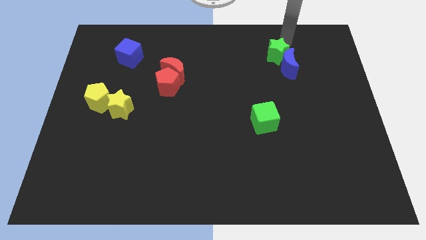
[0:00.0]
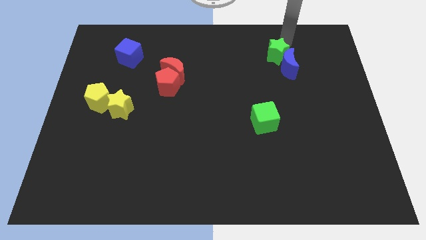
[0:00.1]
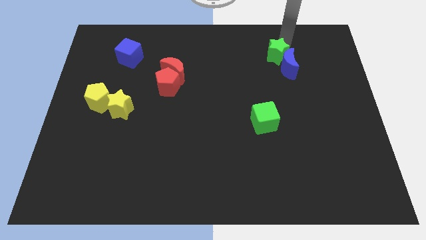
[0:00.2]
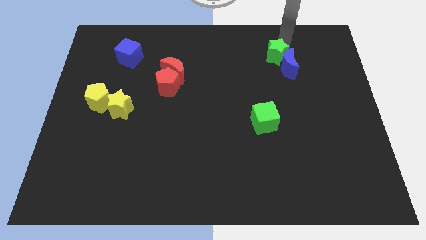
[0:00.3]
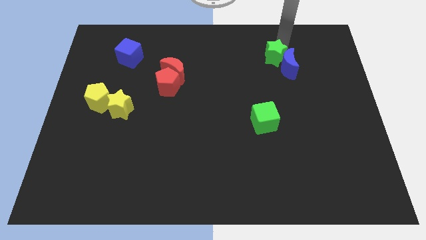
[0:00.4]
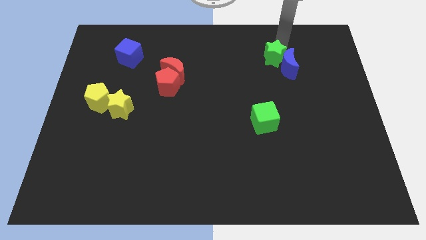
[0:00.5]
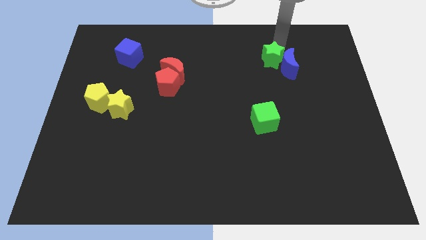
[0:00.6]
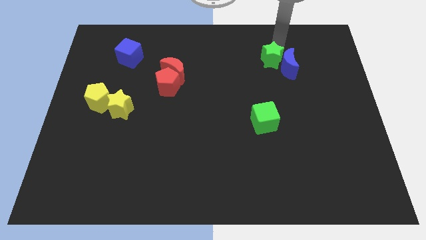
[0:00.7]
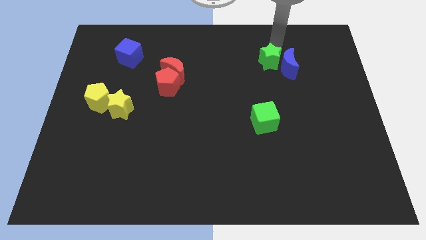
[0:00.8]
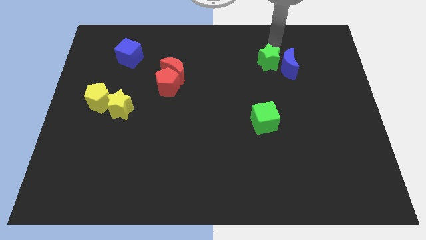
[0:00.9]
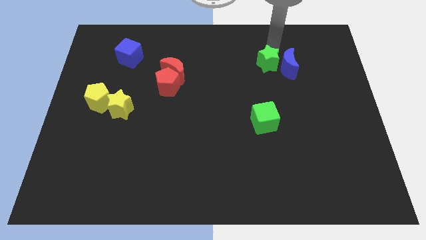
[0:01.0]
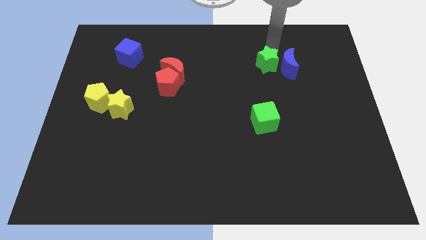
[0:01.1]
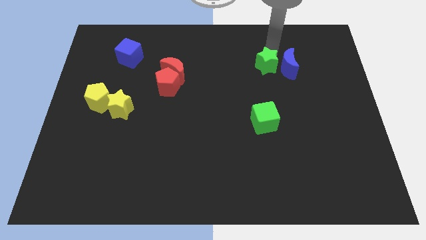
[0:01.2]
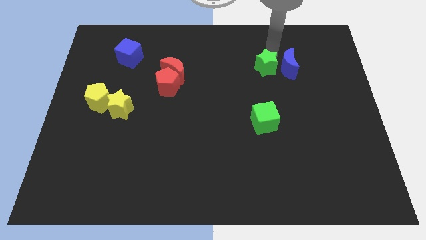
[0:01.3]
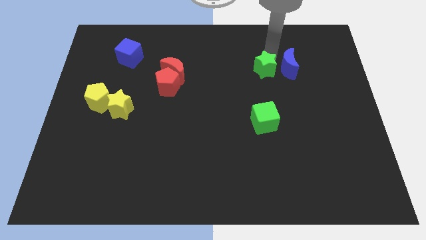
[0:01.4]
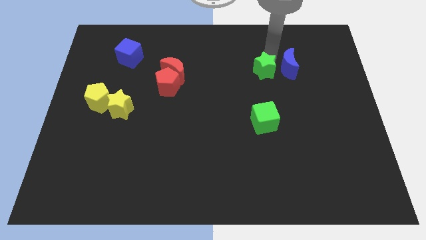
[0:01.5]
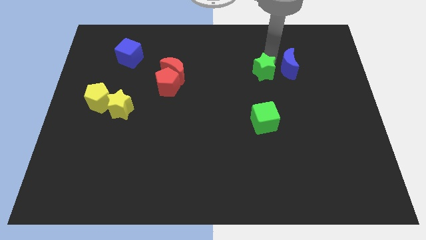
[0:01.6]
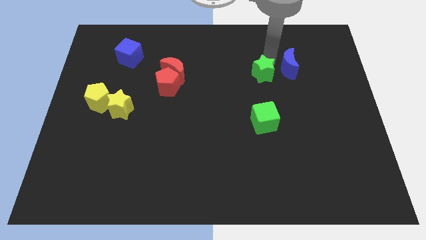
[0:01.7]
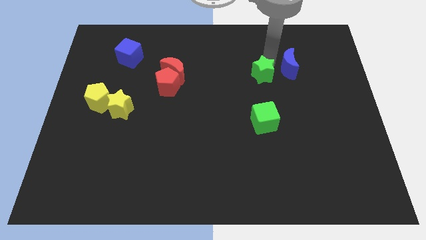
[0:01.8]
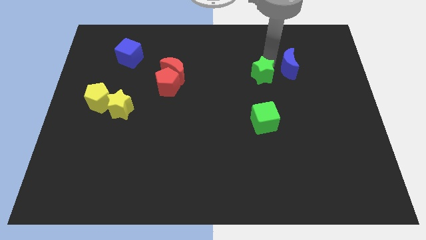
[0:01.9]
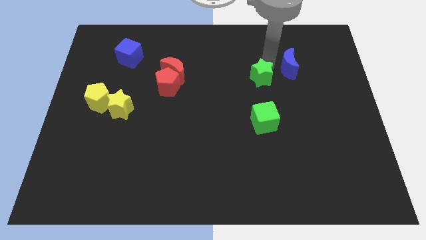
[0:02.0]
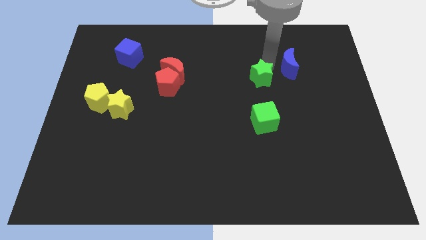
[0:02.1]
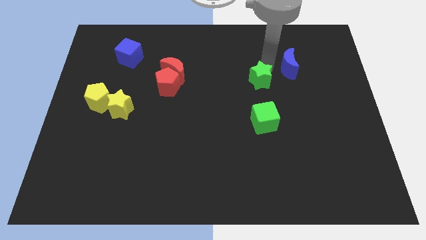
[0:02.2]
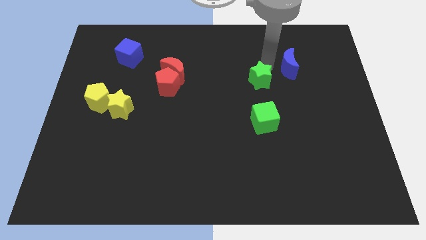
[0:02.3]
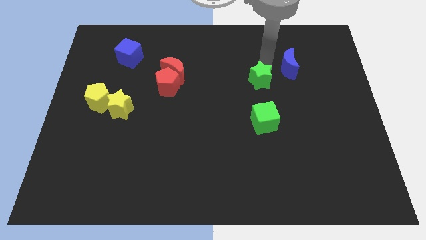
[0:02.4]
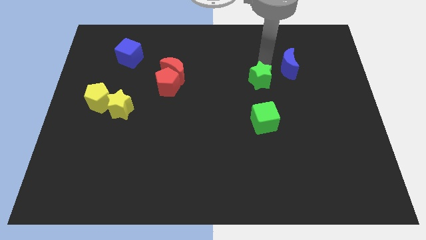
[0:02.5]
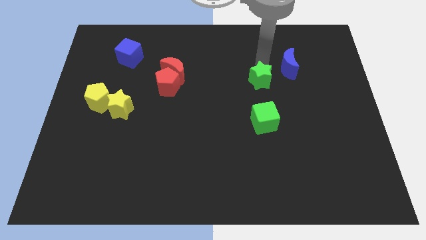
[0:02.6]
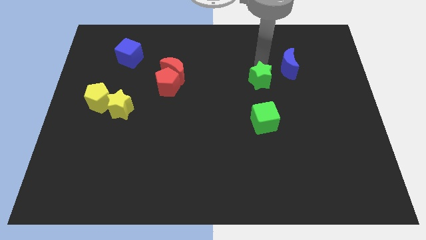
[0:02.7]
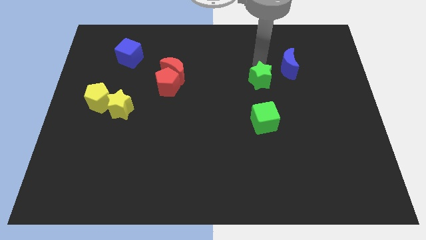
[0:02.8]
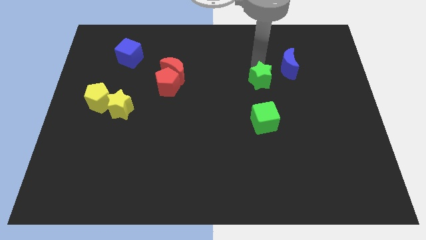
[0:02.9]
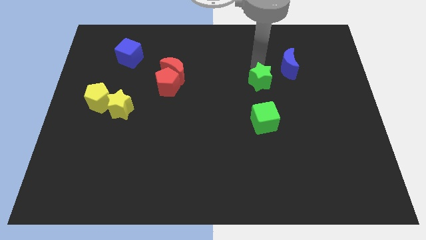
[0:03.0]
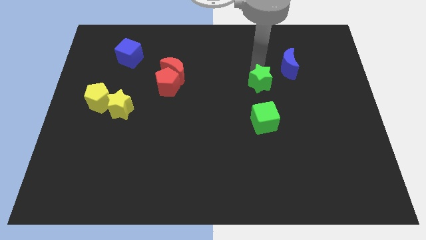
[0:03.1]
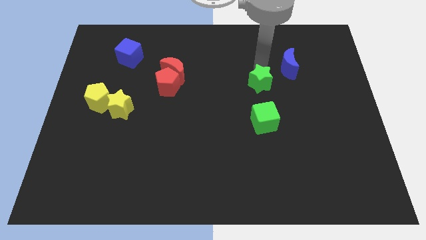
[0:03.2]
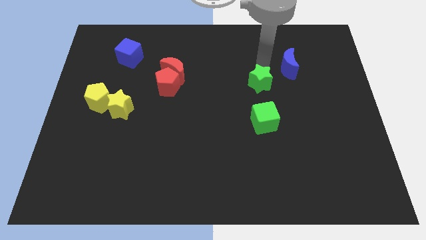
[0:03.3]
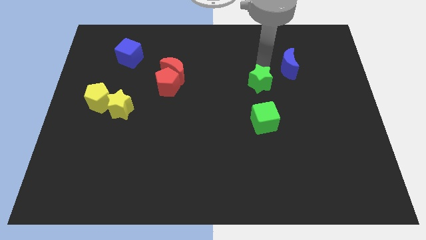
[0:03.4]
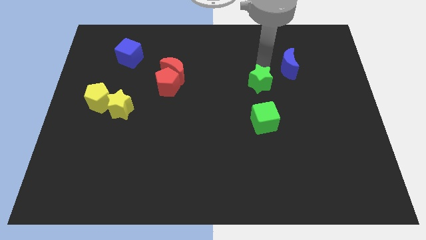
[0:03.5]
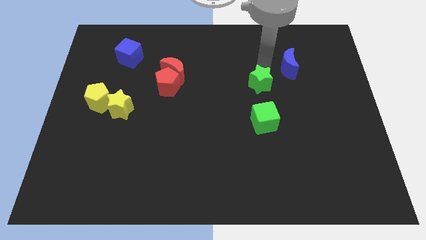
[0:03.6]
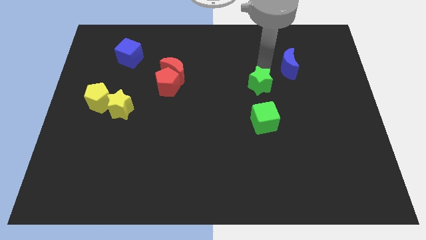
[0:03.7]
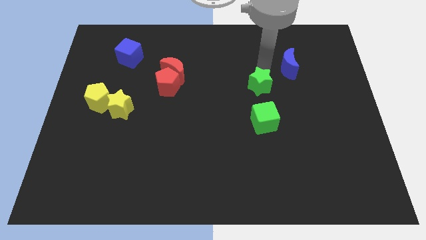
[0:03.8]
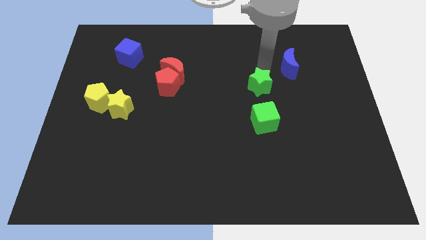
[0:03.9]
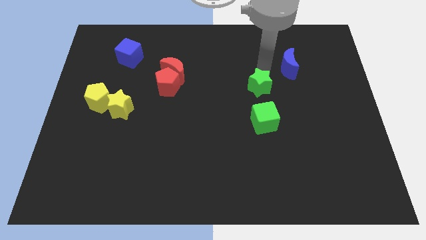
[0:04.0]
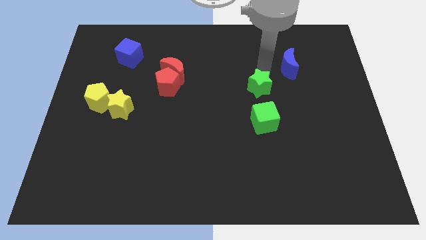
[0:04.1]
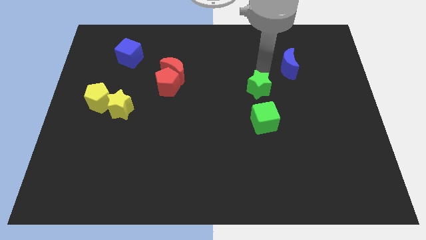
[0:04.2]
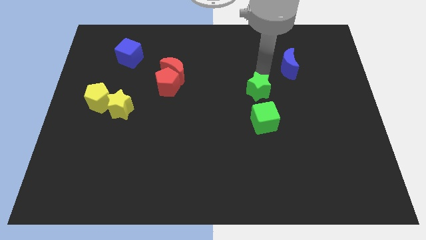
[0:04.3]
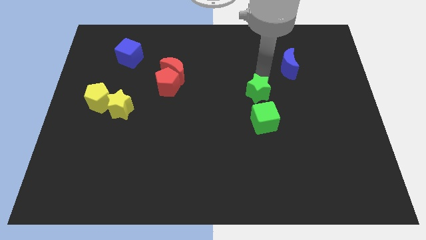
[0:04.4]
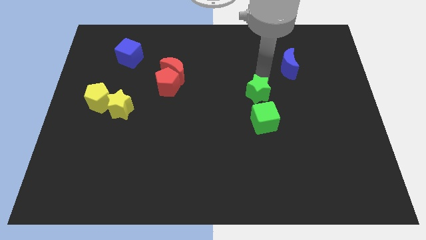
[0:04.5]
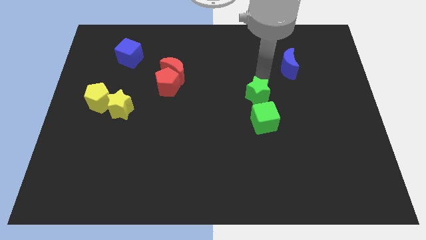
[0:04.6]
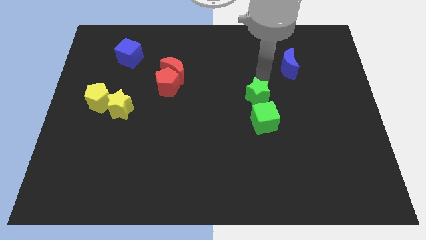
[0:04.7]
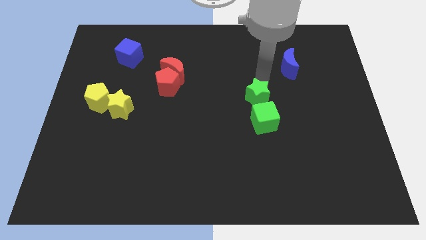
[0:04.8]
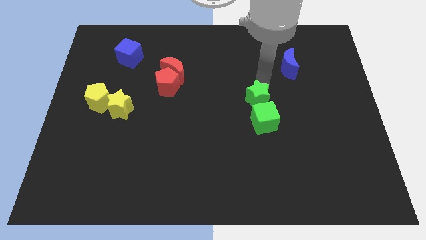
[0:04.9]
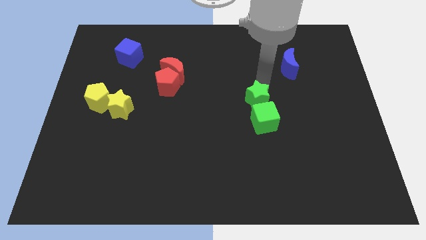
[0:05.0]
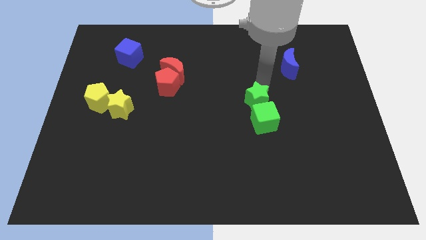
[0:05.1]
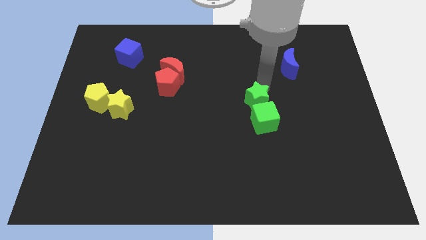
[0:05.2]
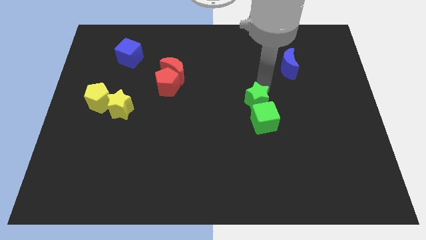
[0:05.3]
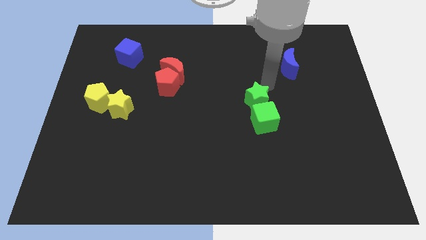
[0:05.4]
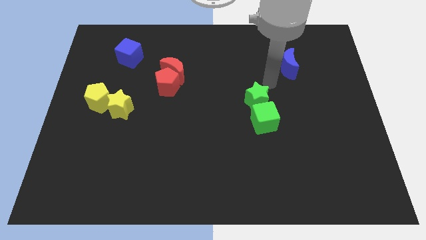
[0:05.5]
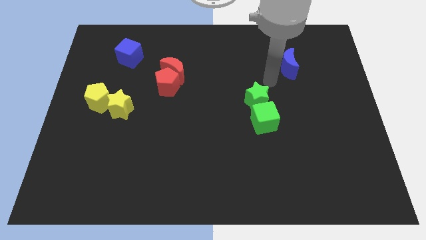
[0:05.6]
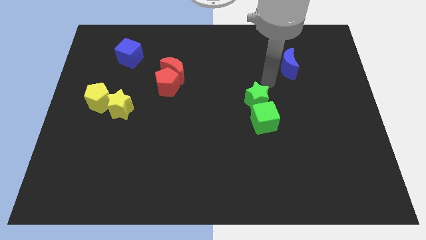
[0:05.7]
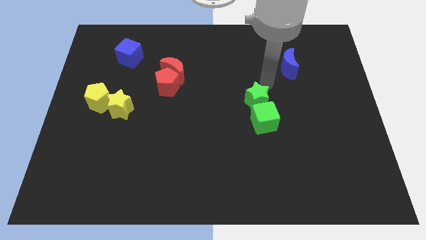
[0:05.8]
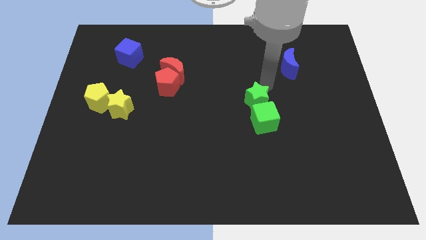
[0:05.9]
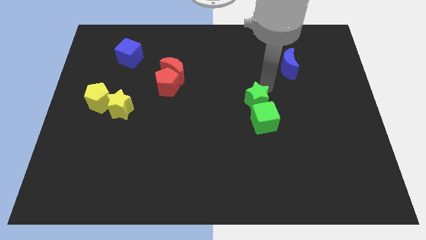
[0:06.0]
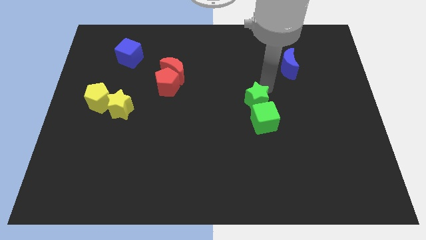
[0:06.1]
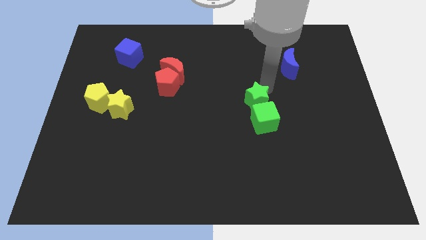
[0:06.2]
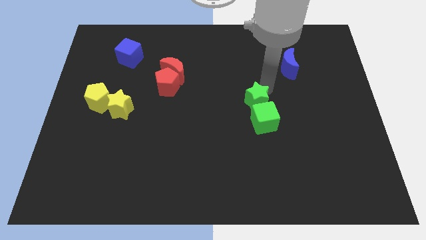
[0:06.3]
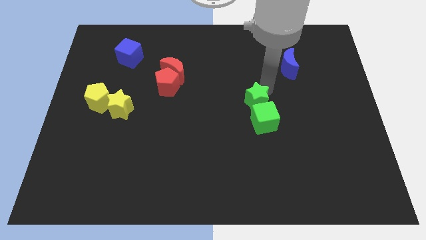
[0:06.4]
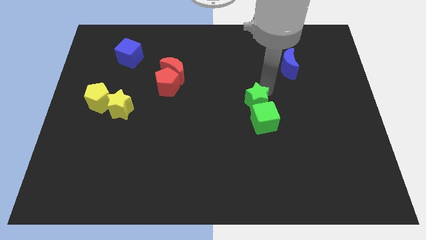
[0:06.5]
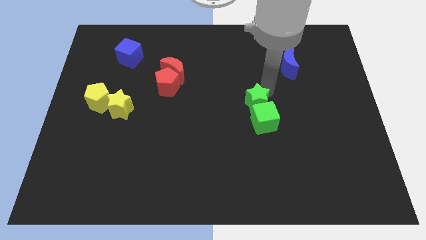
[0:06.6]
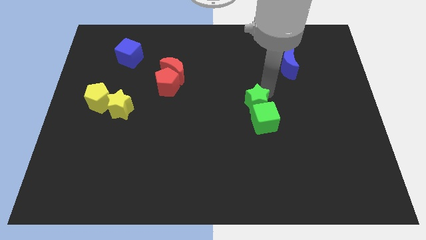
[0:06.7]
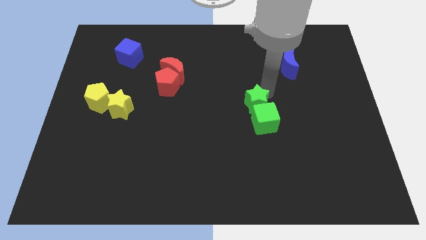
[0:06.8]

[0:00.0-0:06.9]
move the green star into the top side of the green cube

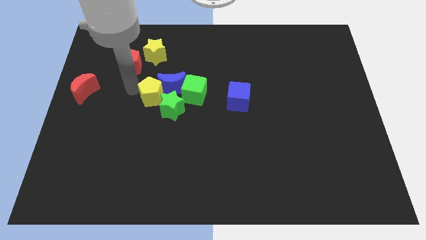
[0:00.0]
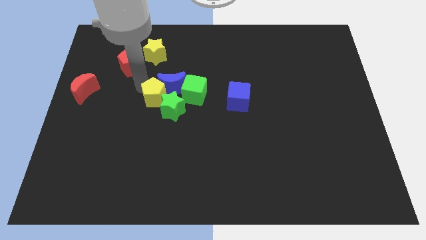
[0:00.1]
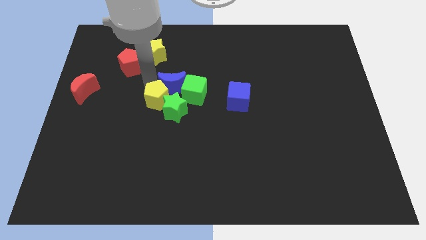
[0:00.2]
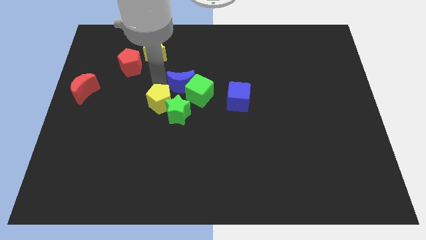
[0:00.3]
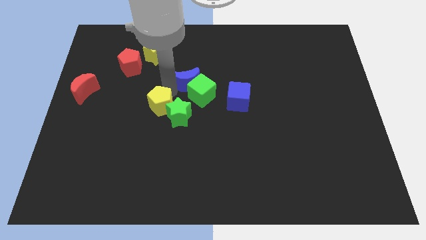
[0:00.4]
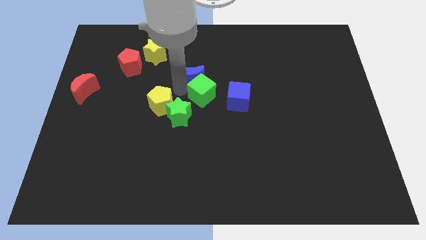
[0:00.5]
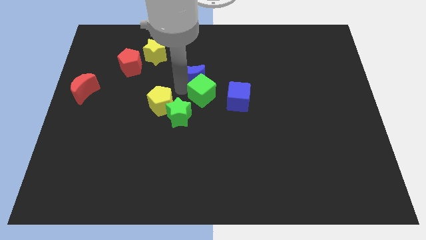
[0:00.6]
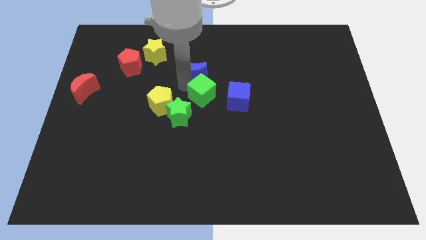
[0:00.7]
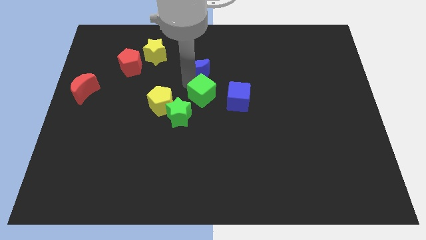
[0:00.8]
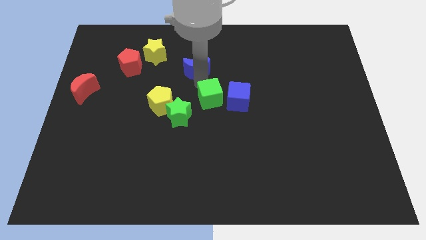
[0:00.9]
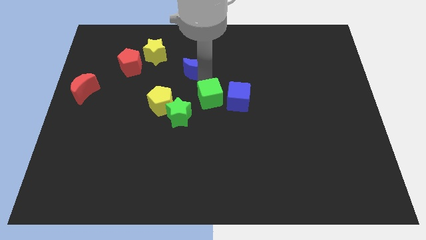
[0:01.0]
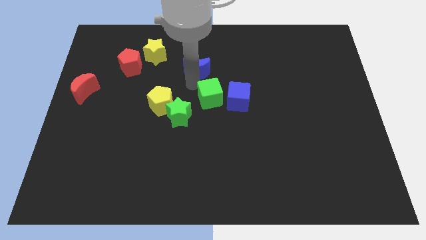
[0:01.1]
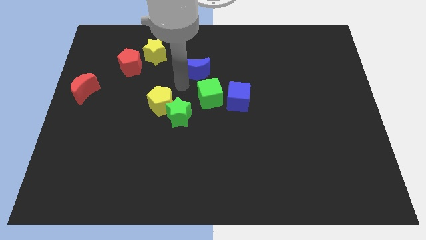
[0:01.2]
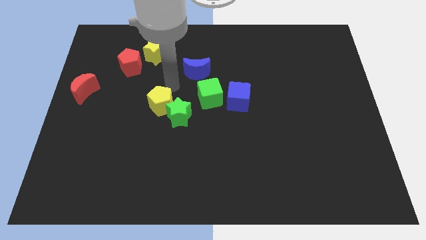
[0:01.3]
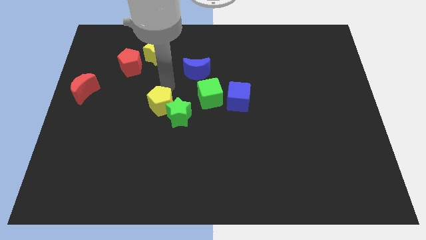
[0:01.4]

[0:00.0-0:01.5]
separate the blue crescent from the group of blocks

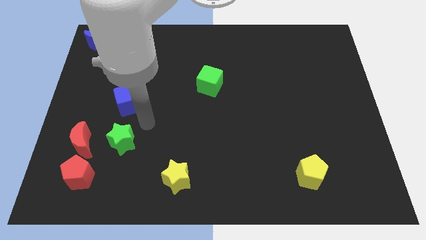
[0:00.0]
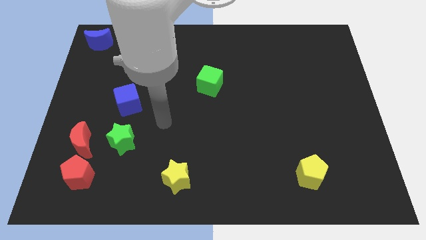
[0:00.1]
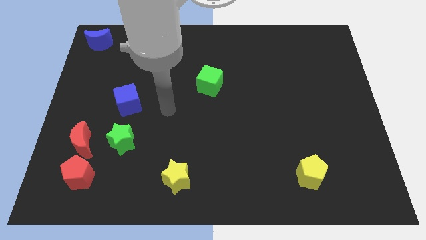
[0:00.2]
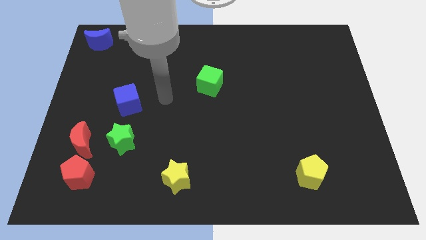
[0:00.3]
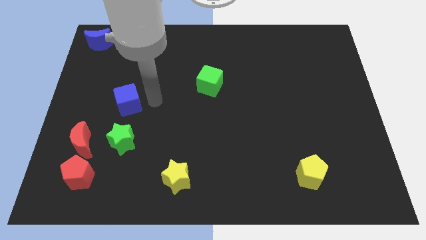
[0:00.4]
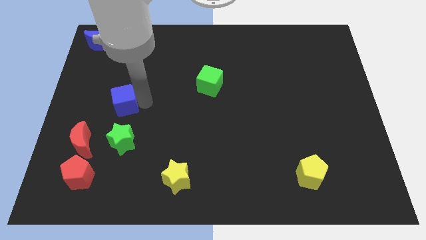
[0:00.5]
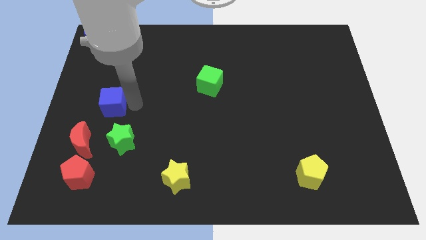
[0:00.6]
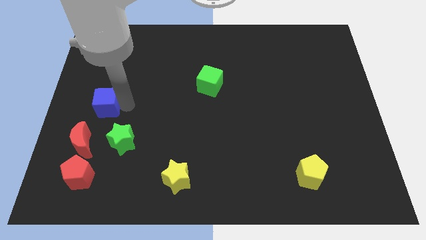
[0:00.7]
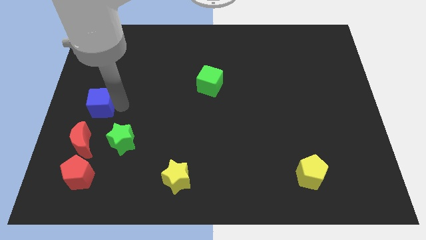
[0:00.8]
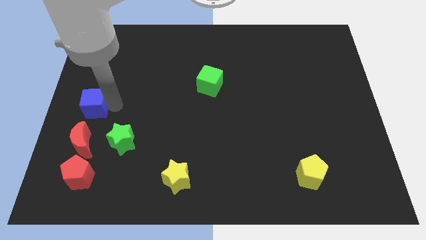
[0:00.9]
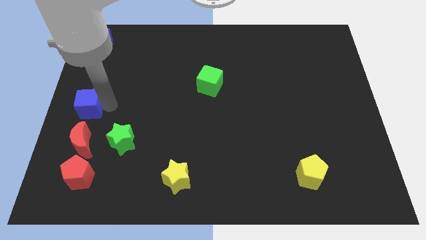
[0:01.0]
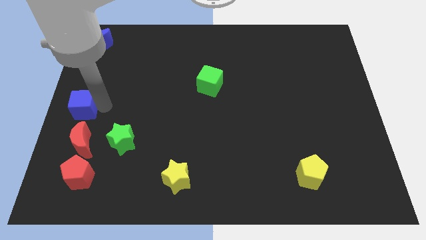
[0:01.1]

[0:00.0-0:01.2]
place blue cube to the top of red moon
